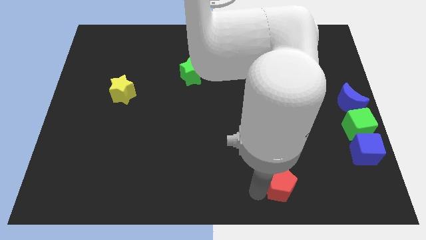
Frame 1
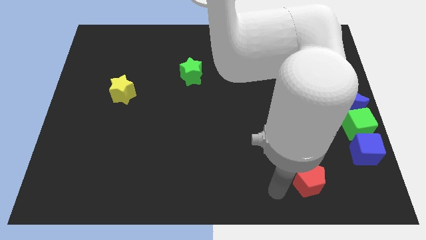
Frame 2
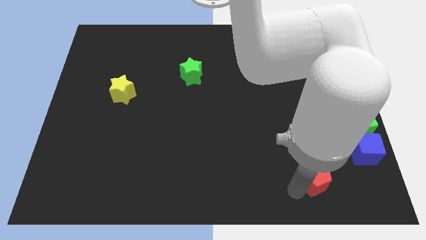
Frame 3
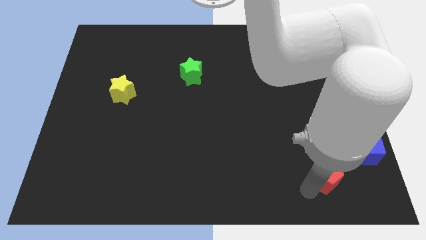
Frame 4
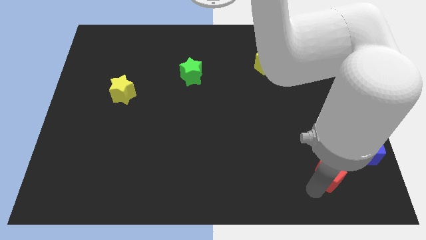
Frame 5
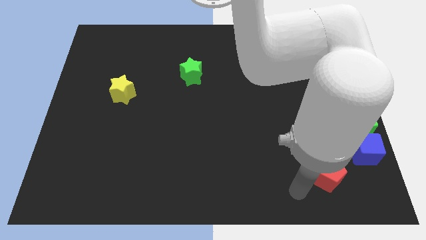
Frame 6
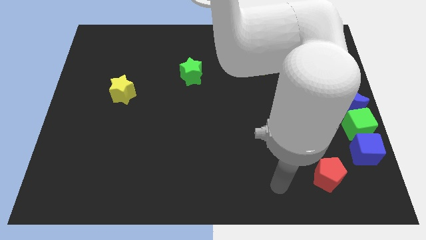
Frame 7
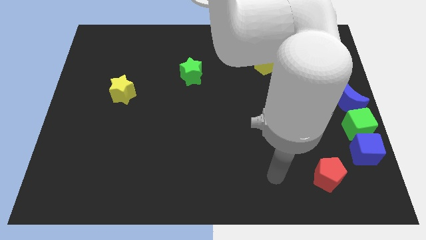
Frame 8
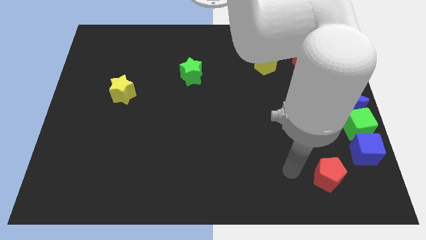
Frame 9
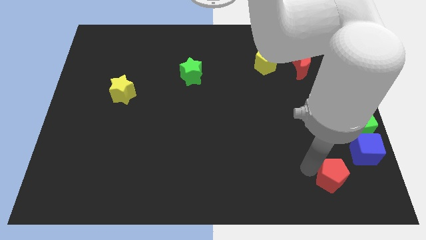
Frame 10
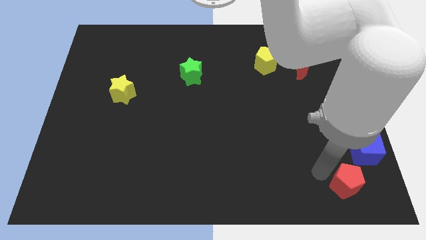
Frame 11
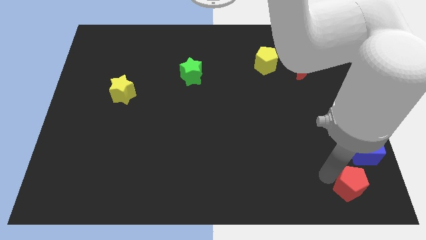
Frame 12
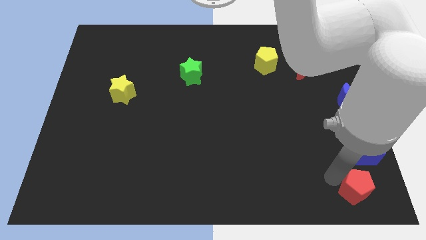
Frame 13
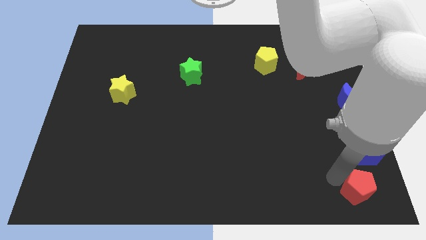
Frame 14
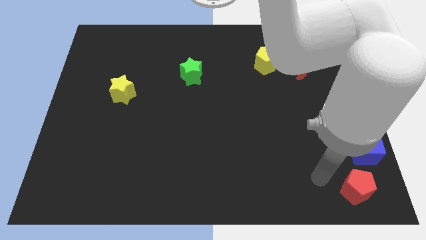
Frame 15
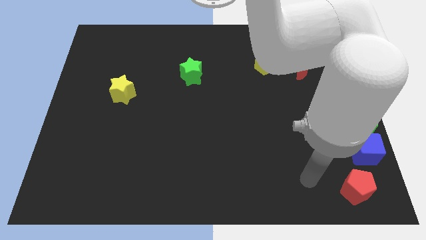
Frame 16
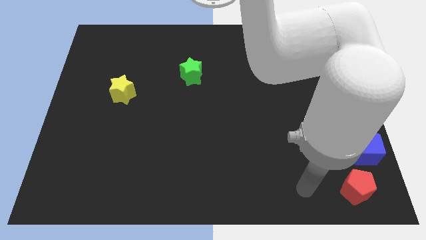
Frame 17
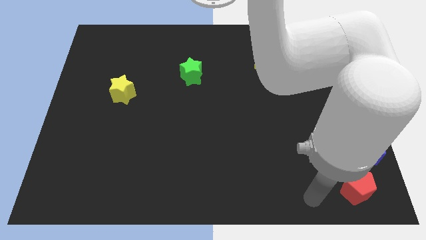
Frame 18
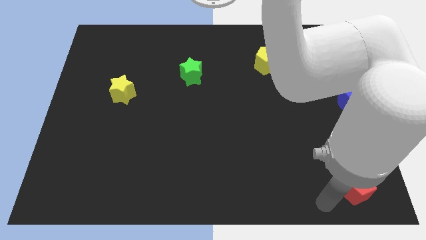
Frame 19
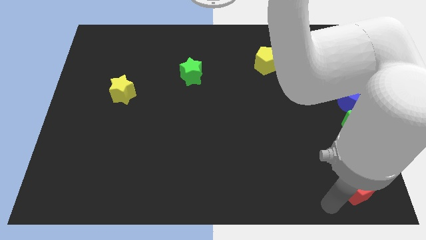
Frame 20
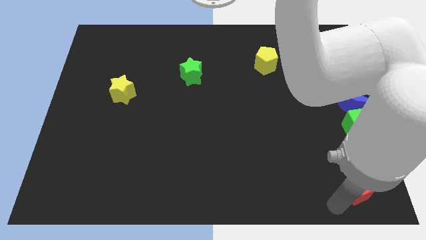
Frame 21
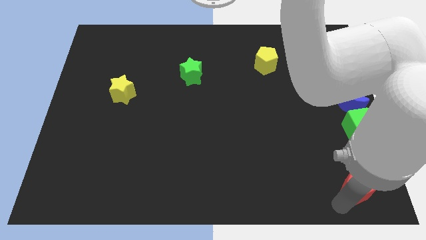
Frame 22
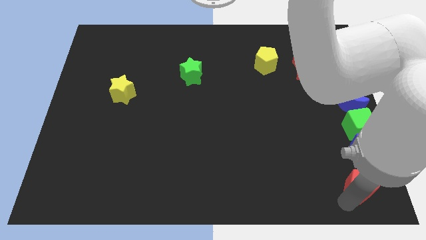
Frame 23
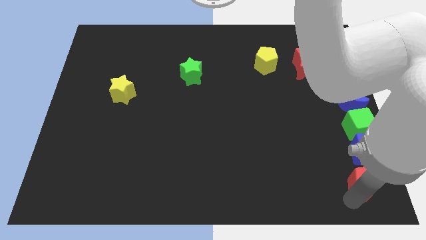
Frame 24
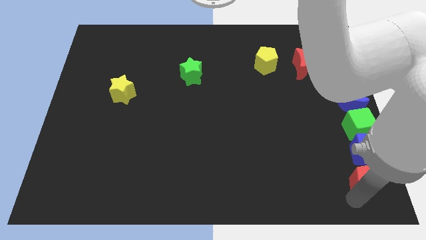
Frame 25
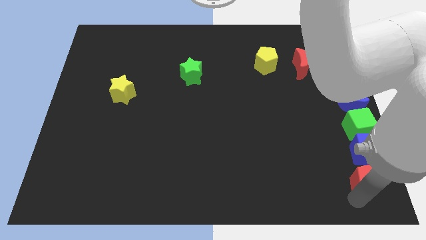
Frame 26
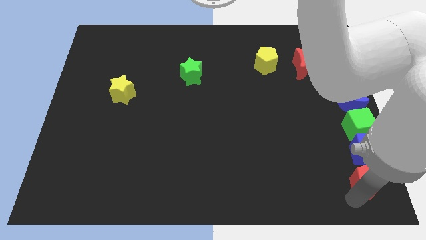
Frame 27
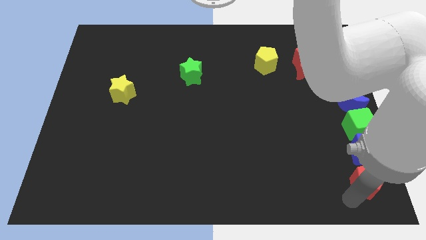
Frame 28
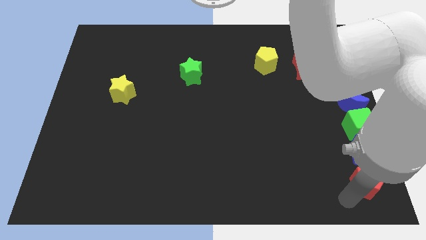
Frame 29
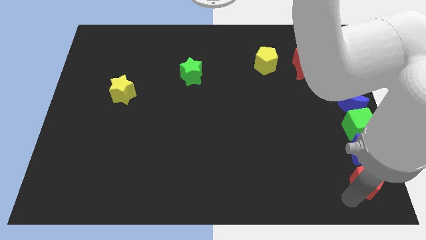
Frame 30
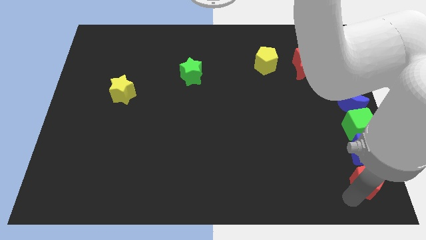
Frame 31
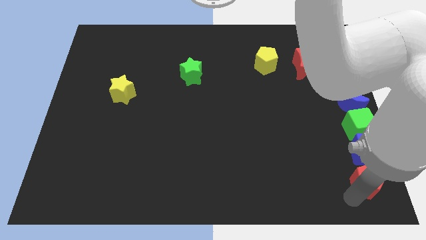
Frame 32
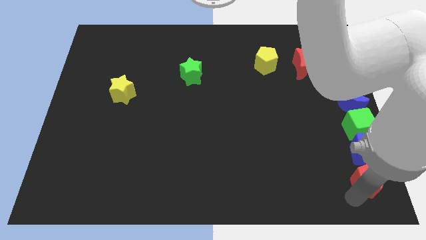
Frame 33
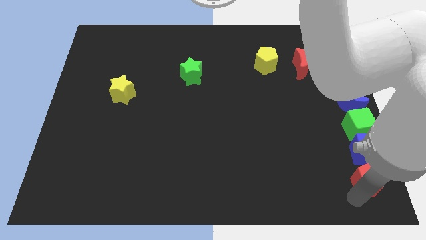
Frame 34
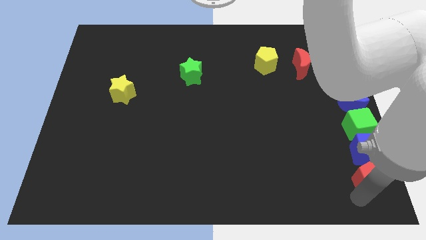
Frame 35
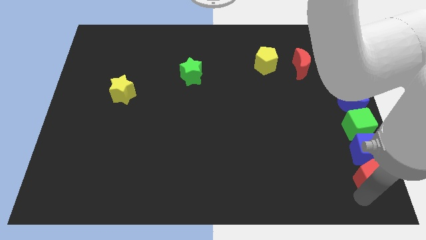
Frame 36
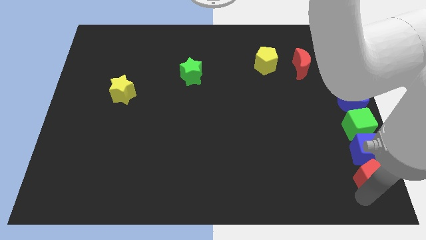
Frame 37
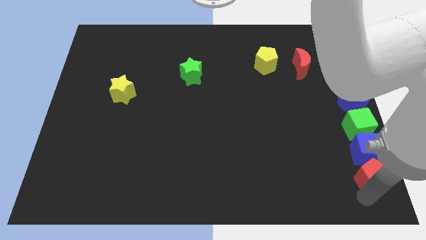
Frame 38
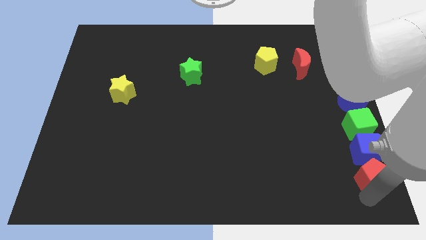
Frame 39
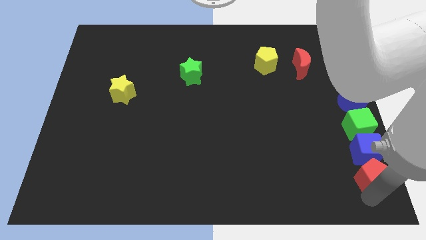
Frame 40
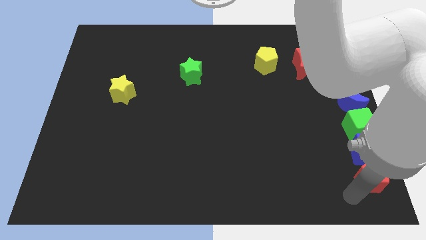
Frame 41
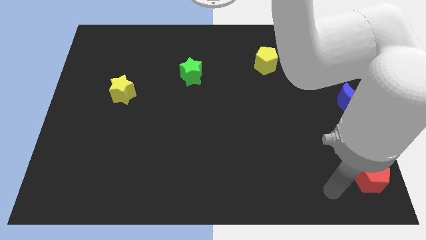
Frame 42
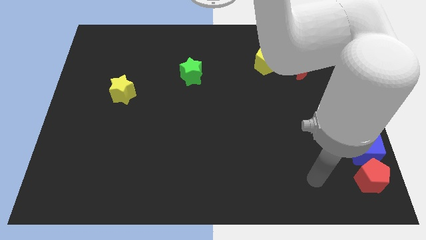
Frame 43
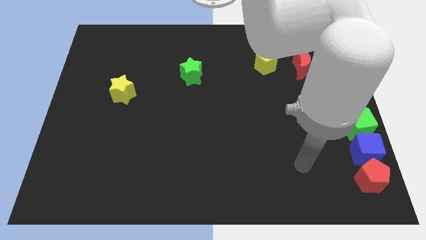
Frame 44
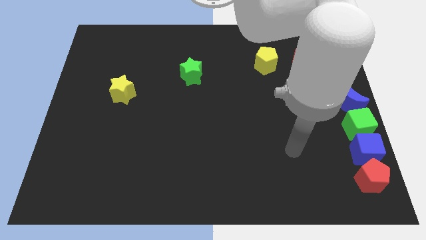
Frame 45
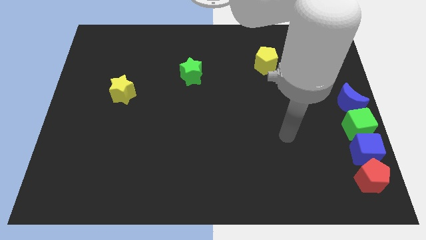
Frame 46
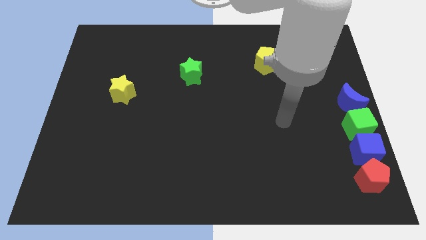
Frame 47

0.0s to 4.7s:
place the red pentagon underneath the blue cube

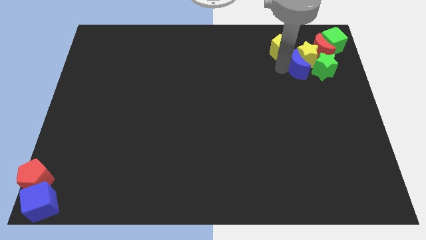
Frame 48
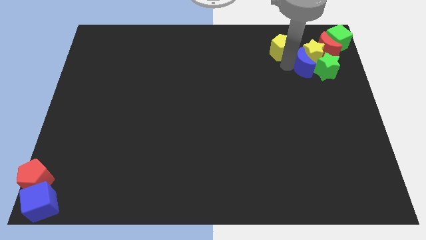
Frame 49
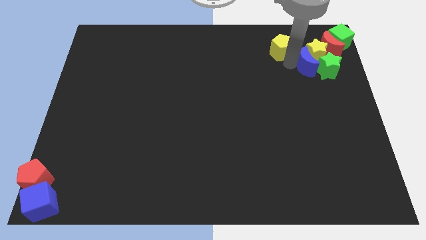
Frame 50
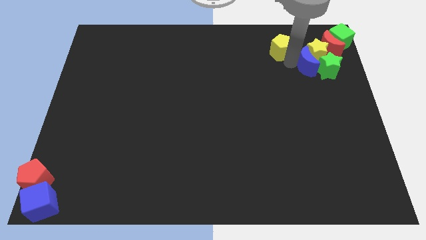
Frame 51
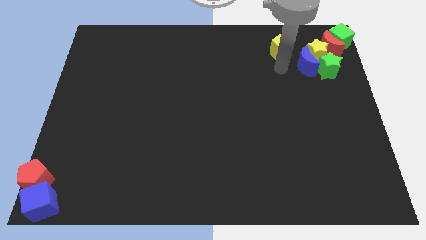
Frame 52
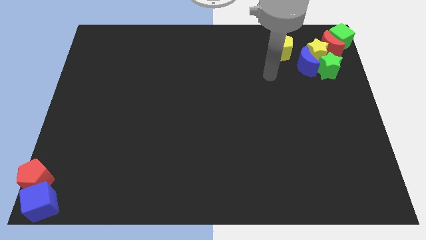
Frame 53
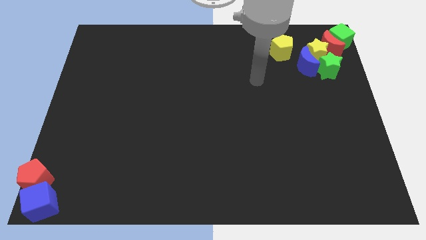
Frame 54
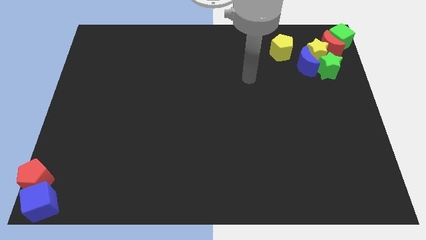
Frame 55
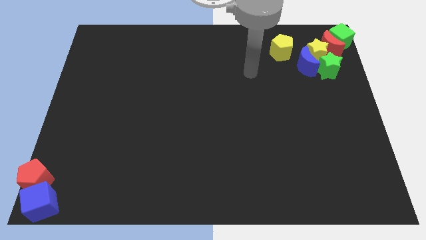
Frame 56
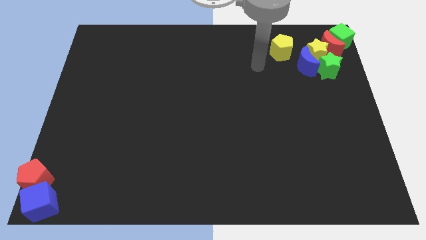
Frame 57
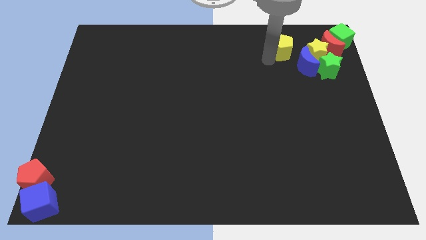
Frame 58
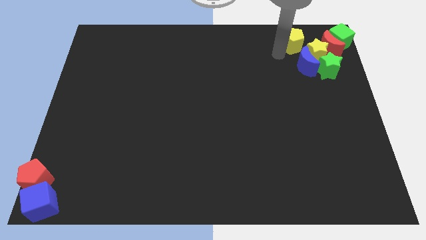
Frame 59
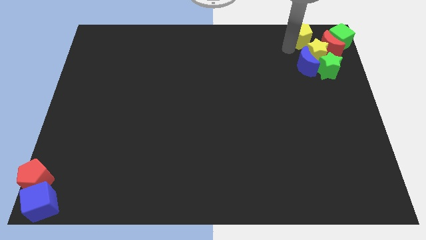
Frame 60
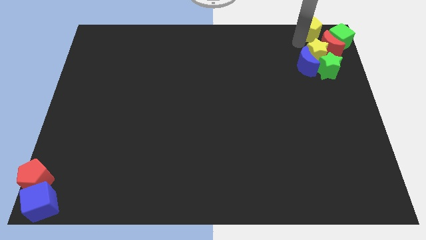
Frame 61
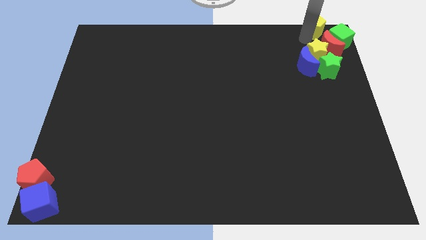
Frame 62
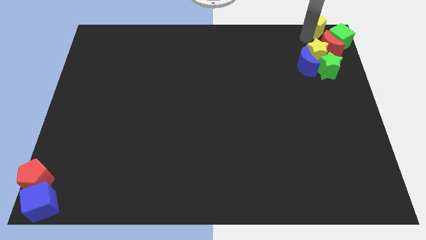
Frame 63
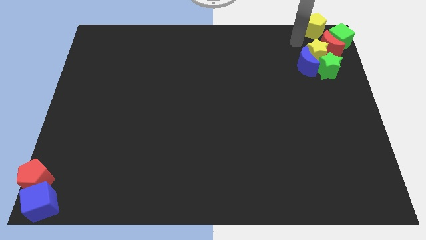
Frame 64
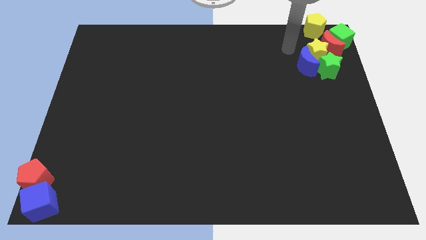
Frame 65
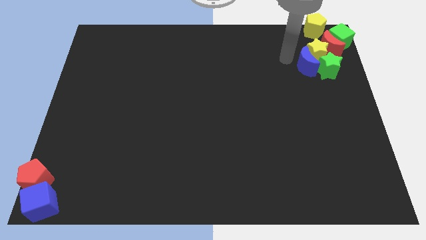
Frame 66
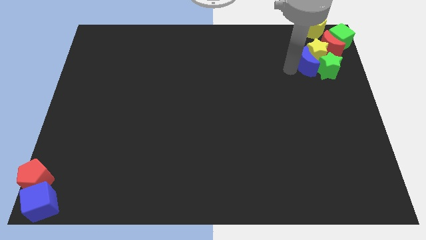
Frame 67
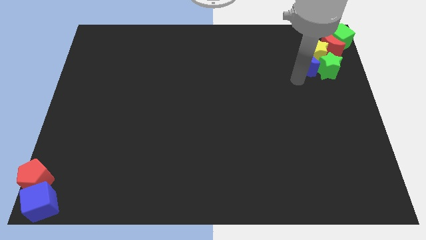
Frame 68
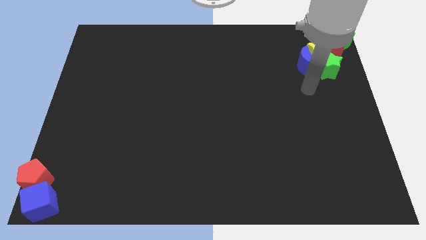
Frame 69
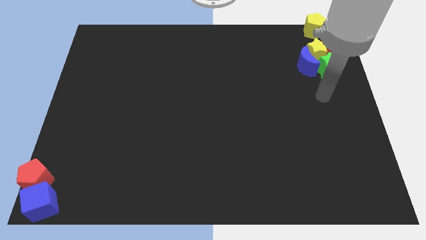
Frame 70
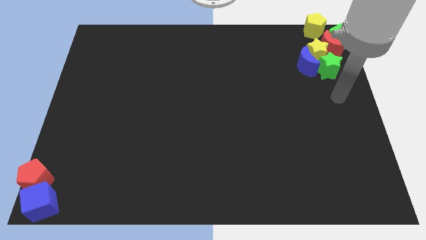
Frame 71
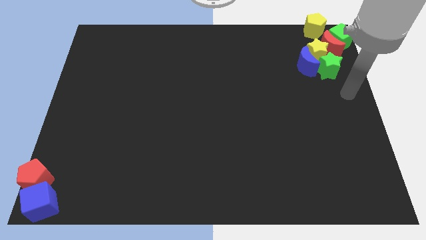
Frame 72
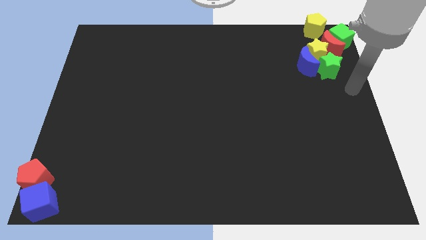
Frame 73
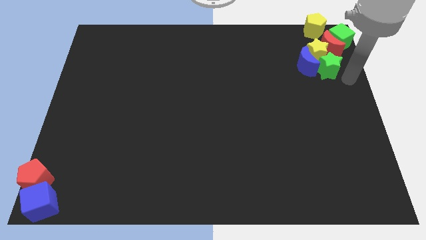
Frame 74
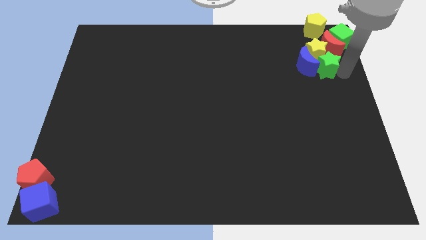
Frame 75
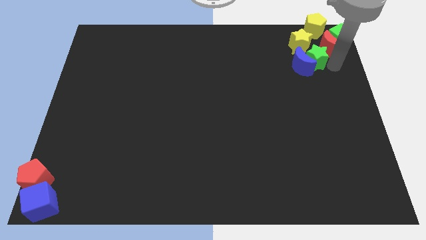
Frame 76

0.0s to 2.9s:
move yellow pentagon above the green star

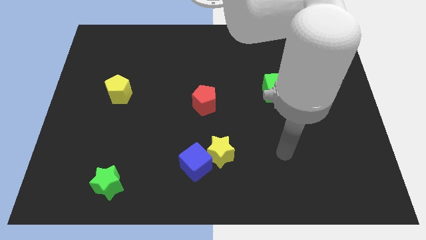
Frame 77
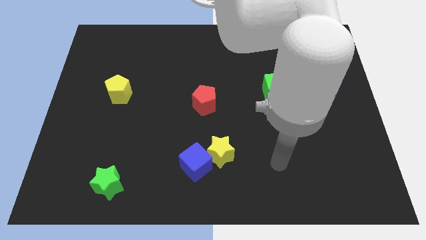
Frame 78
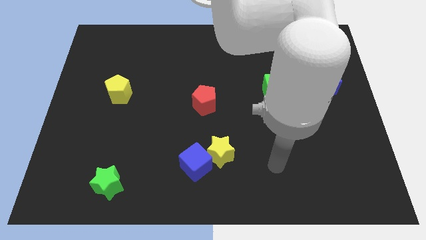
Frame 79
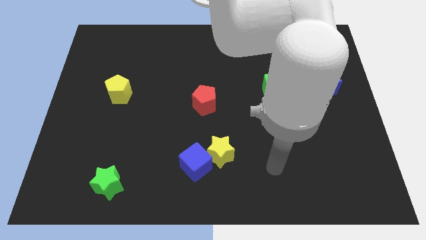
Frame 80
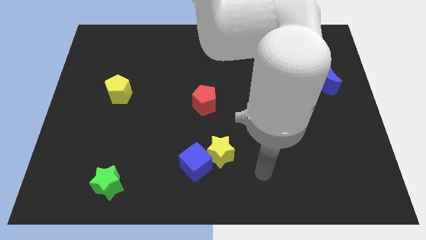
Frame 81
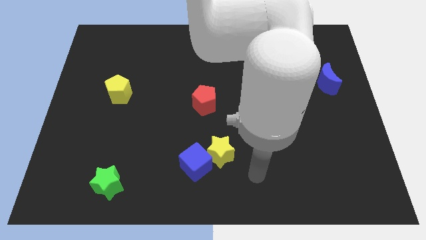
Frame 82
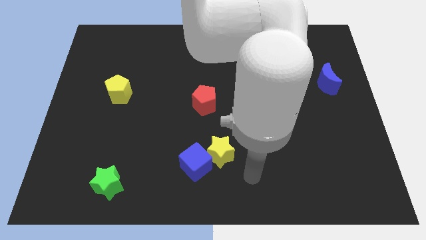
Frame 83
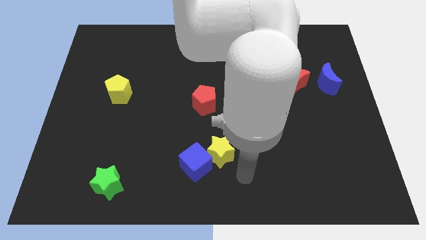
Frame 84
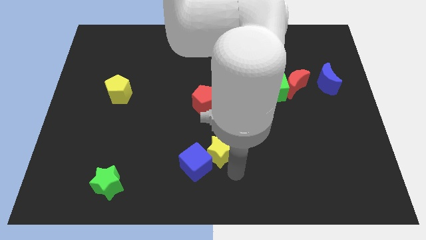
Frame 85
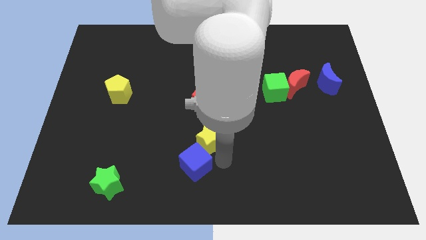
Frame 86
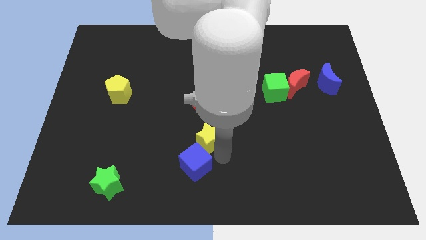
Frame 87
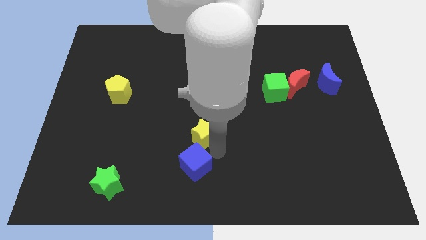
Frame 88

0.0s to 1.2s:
touch at the bottom side of the yellow star
